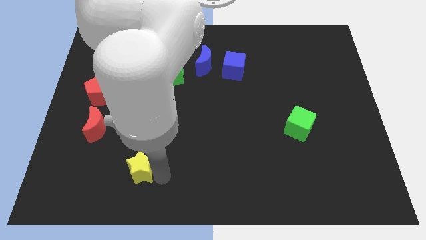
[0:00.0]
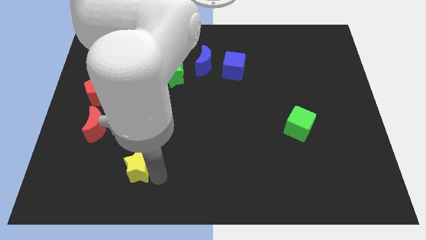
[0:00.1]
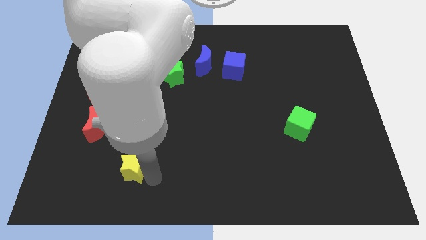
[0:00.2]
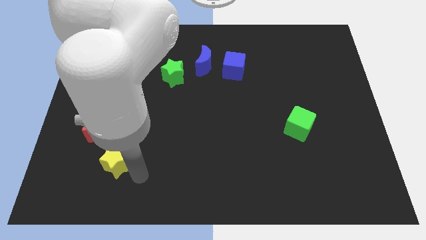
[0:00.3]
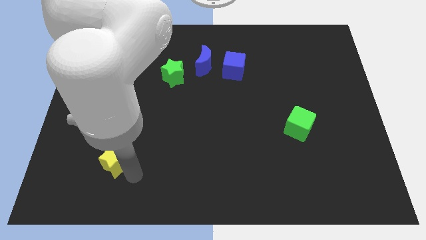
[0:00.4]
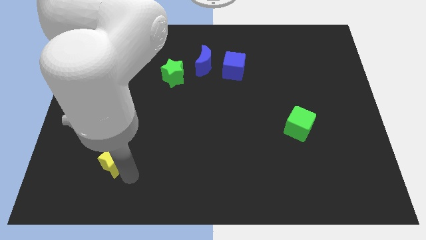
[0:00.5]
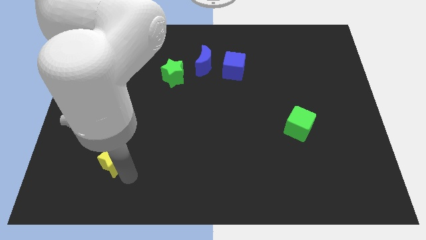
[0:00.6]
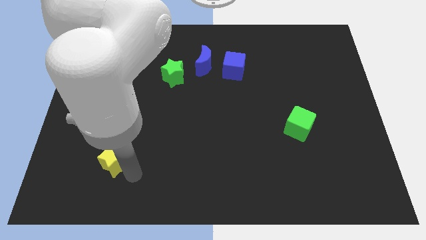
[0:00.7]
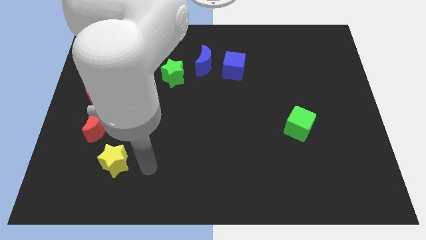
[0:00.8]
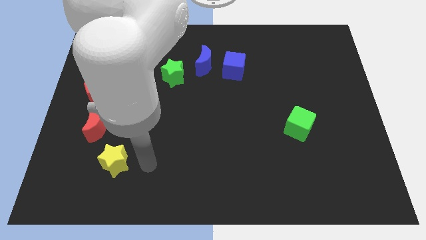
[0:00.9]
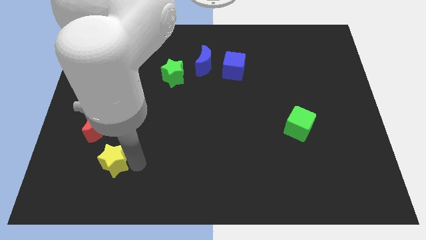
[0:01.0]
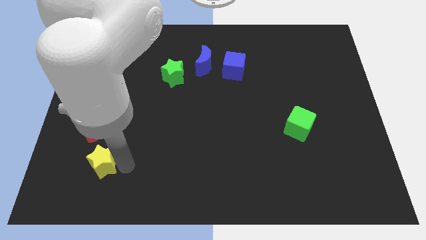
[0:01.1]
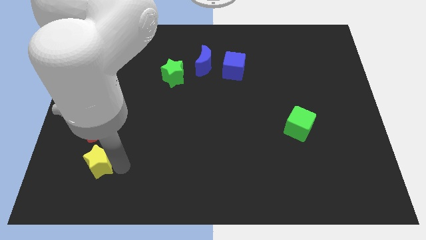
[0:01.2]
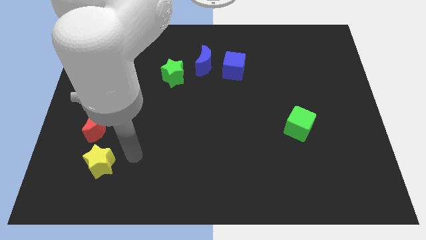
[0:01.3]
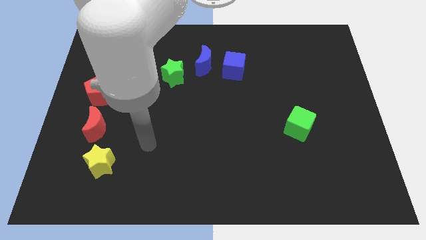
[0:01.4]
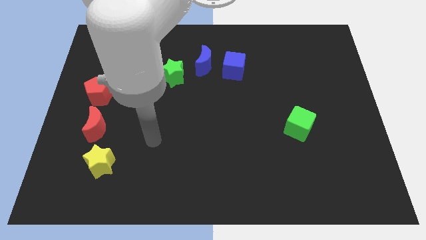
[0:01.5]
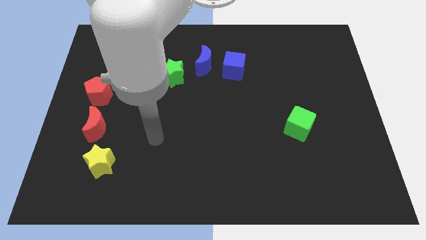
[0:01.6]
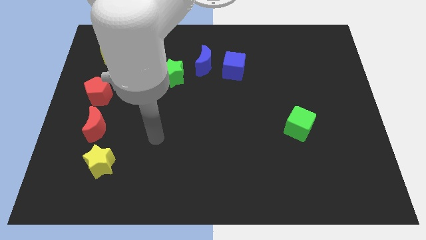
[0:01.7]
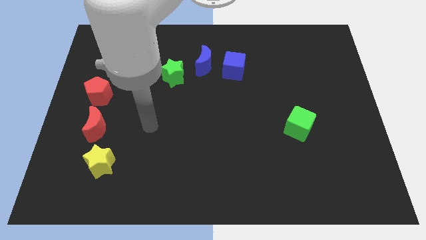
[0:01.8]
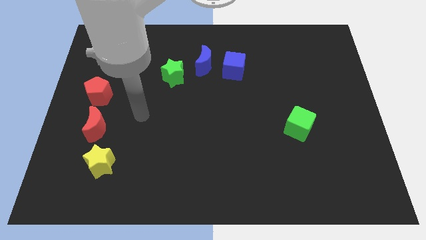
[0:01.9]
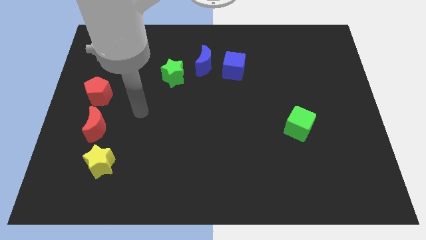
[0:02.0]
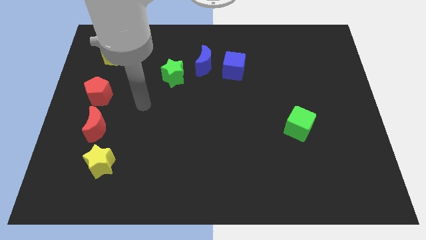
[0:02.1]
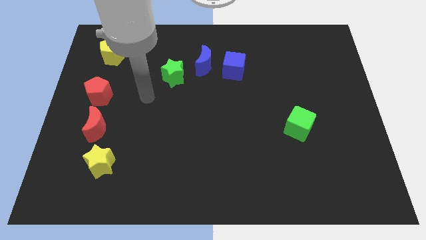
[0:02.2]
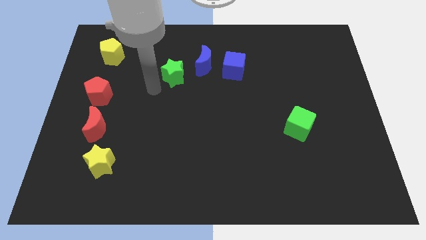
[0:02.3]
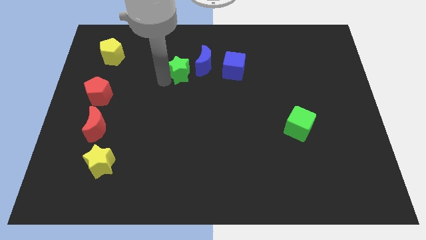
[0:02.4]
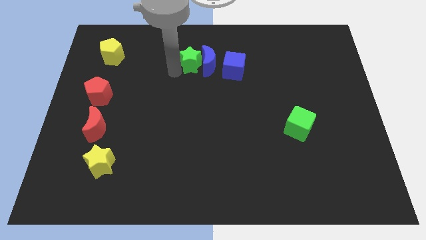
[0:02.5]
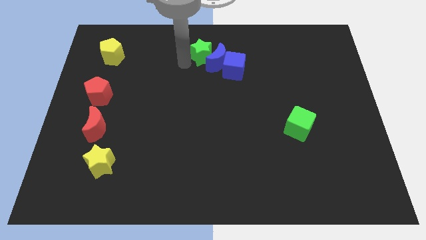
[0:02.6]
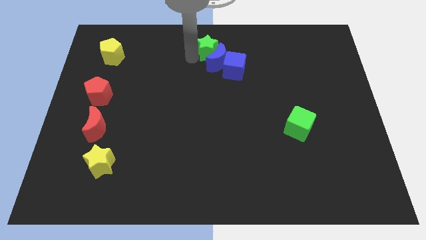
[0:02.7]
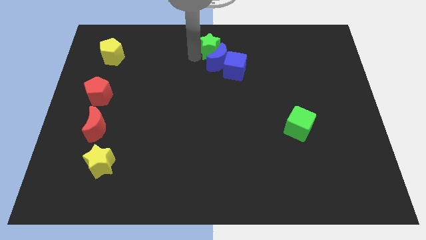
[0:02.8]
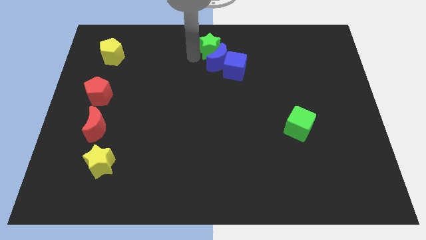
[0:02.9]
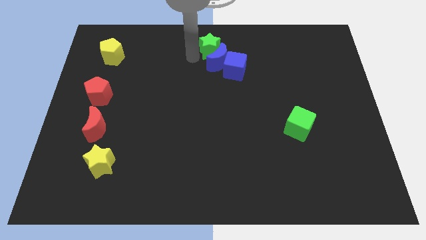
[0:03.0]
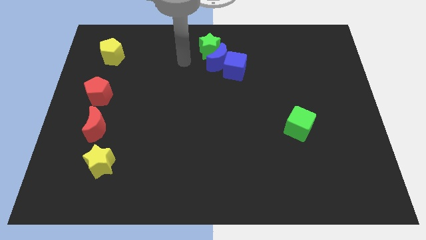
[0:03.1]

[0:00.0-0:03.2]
move your hand towards the right side of the green star

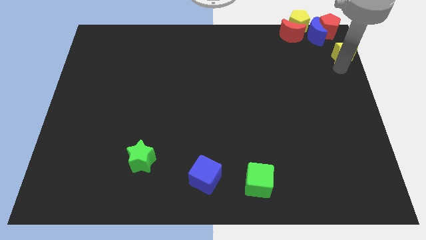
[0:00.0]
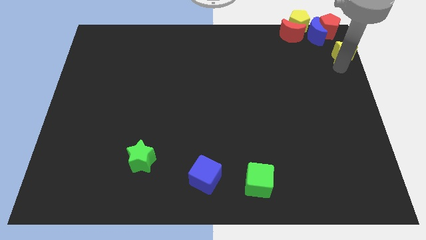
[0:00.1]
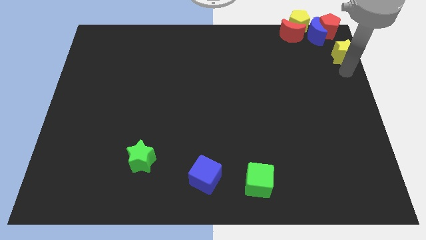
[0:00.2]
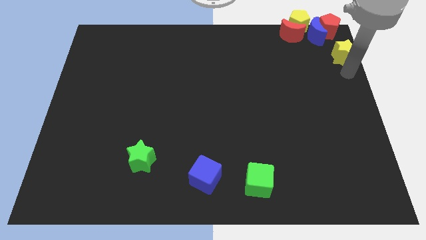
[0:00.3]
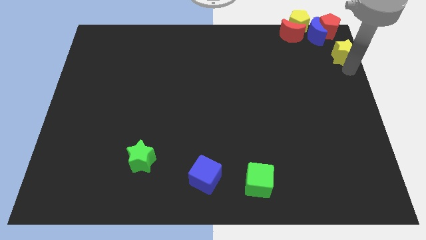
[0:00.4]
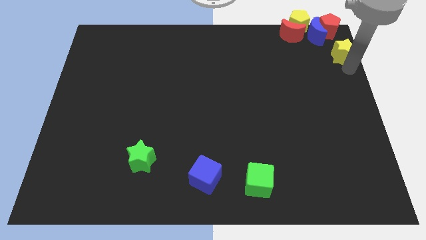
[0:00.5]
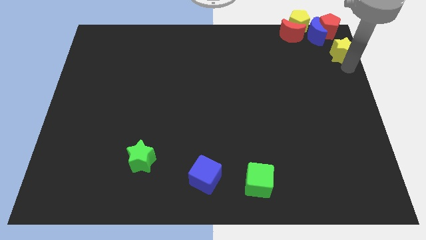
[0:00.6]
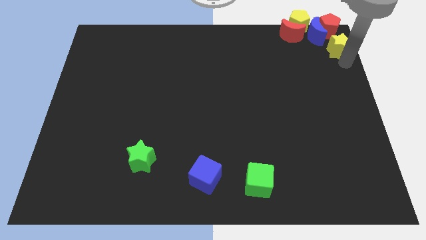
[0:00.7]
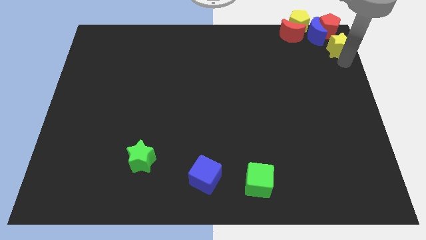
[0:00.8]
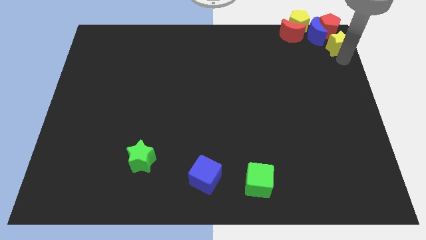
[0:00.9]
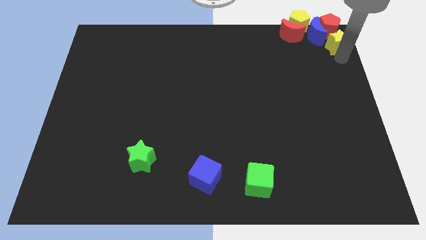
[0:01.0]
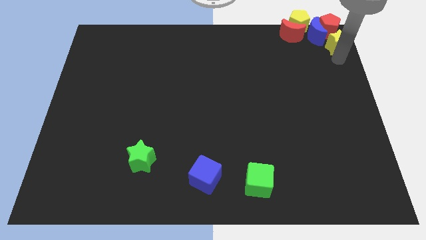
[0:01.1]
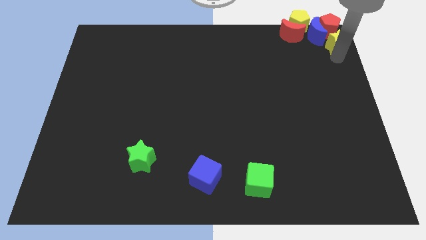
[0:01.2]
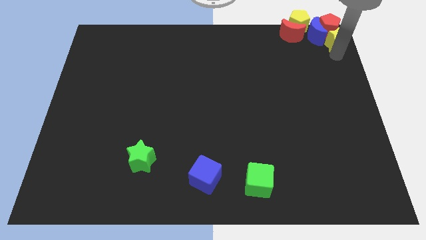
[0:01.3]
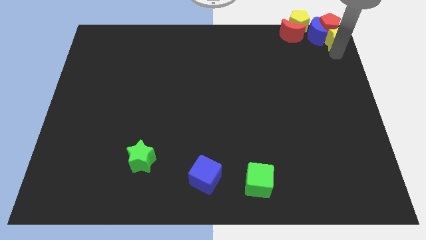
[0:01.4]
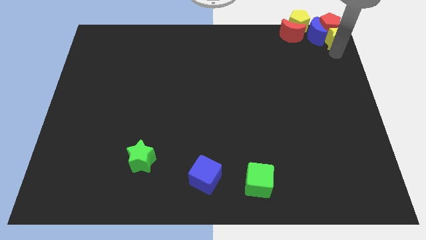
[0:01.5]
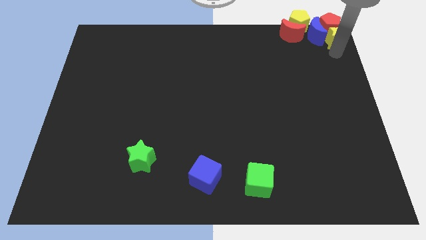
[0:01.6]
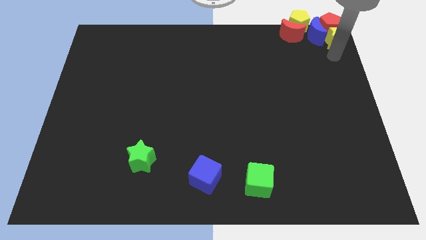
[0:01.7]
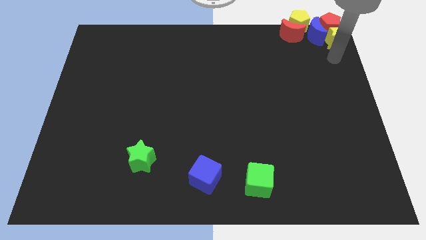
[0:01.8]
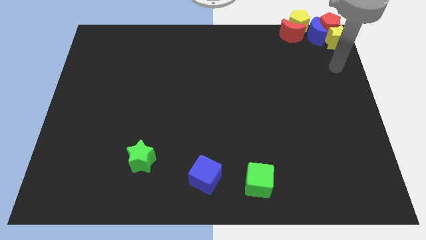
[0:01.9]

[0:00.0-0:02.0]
move yellow star into group of blocks

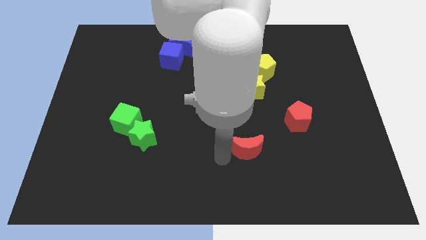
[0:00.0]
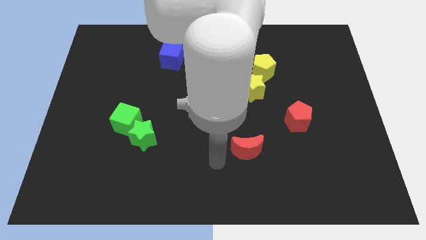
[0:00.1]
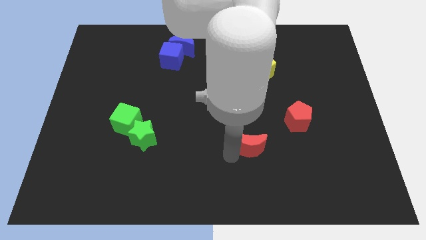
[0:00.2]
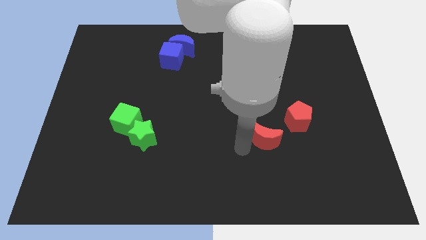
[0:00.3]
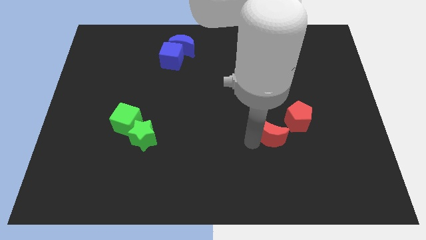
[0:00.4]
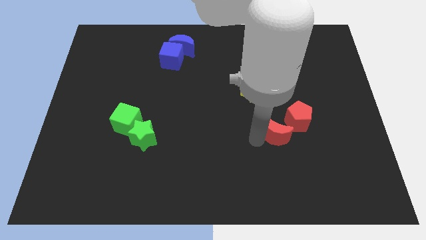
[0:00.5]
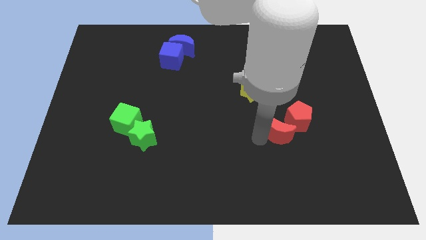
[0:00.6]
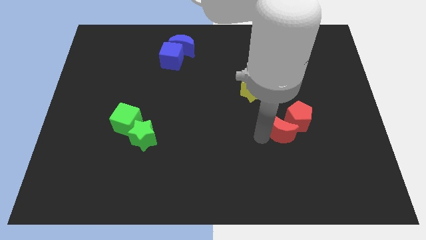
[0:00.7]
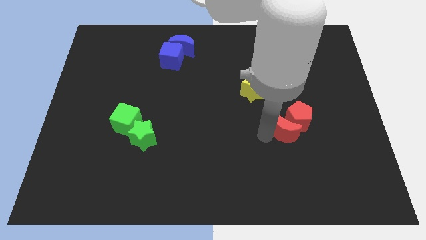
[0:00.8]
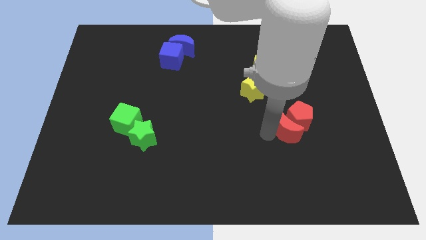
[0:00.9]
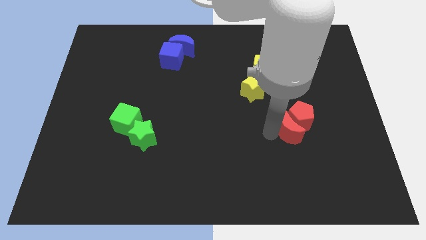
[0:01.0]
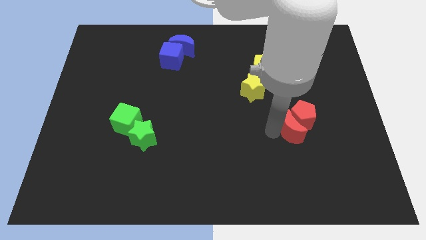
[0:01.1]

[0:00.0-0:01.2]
push the red crescent into the red pentagon

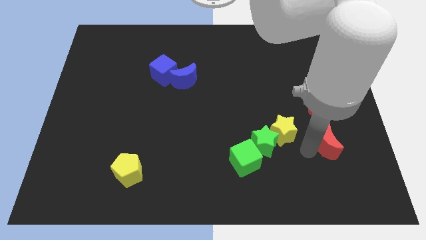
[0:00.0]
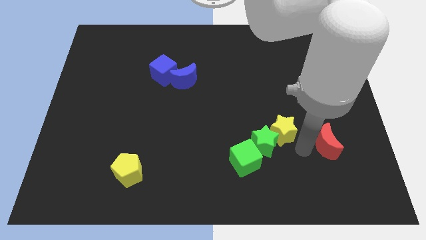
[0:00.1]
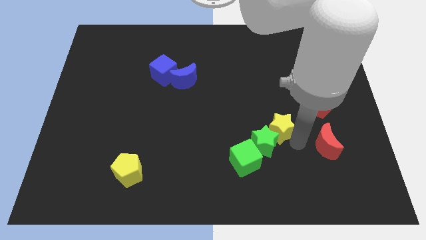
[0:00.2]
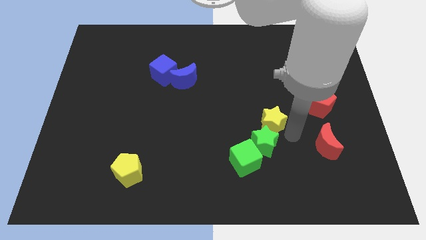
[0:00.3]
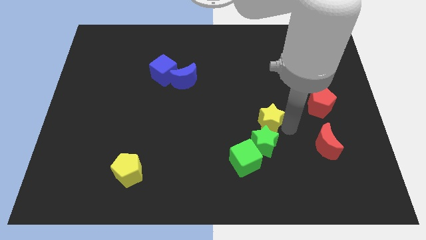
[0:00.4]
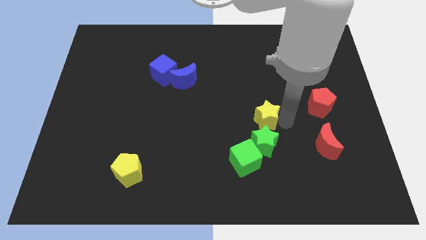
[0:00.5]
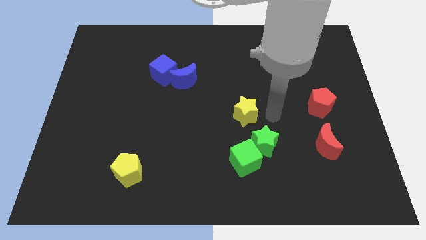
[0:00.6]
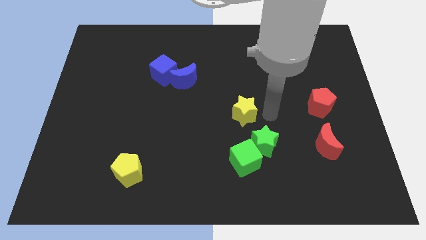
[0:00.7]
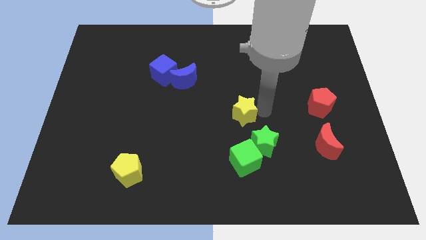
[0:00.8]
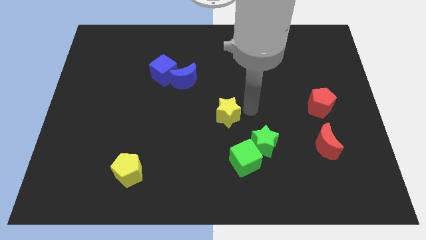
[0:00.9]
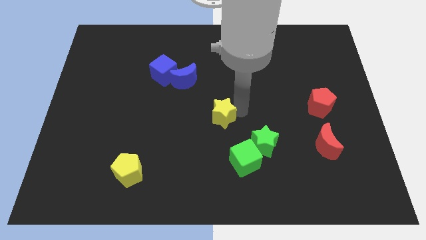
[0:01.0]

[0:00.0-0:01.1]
move the yellow star away from the green star

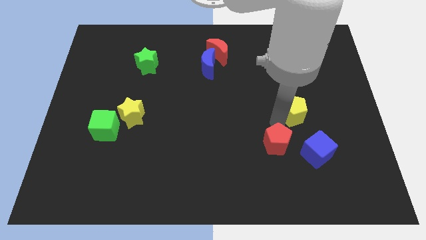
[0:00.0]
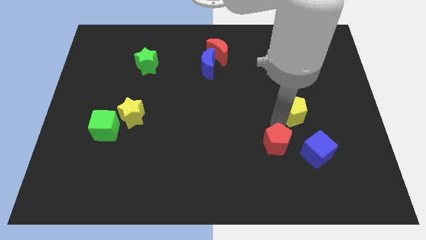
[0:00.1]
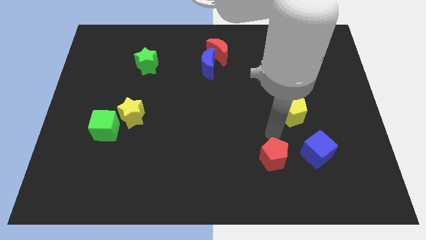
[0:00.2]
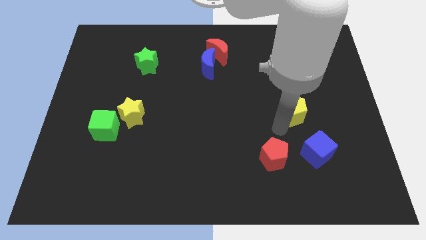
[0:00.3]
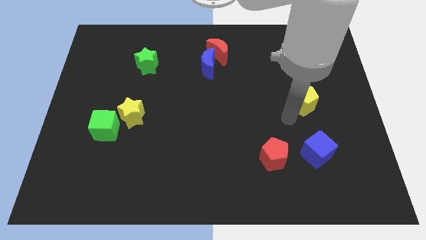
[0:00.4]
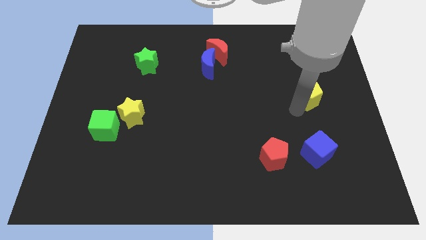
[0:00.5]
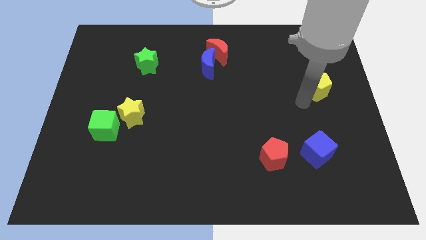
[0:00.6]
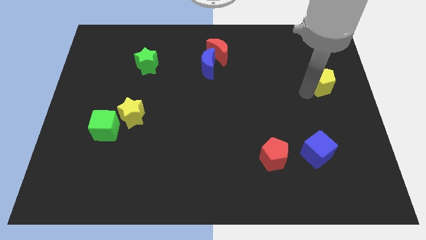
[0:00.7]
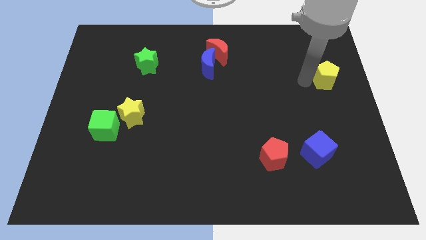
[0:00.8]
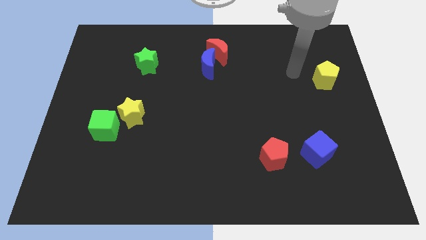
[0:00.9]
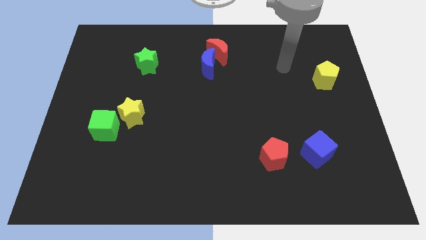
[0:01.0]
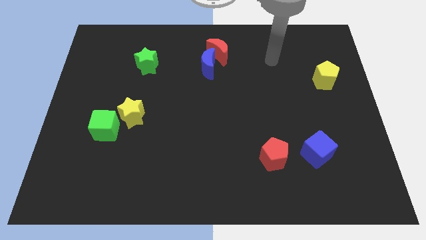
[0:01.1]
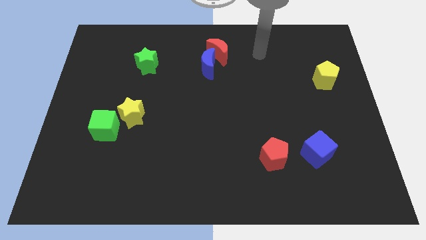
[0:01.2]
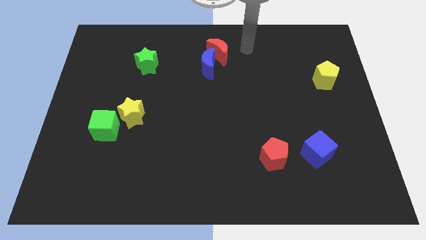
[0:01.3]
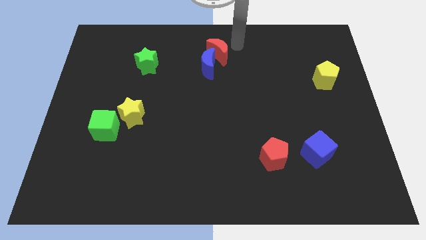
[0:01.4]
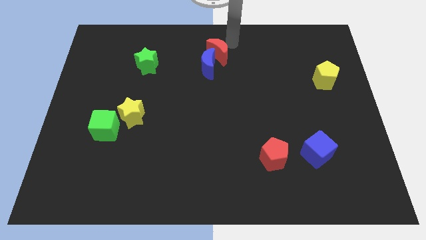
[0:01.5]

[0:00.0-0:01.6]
place the yellow pentagon above the blue cube
